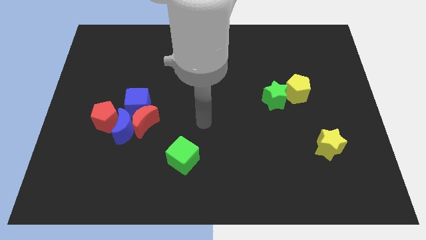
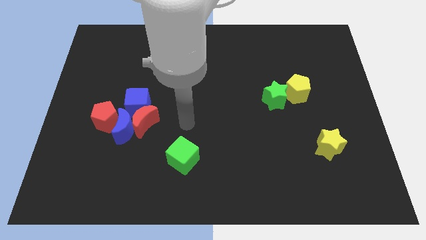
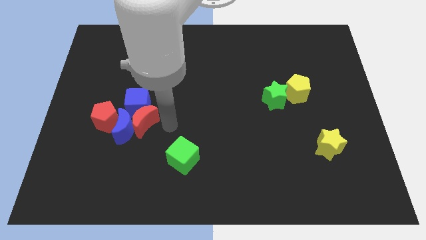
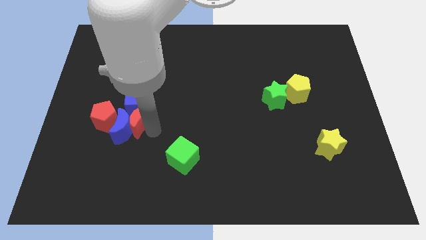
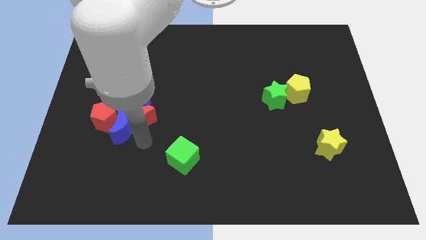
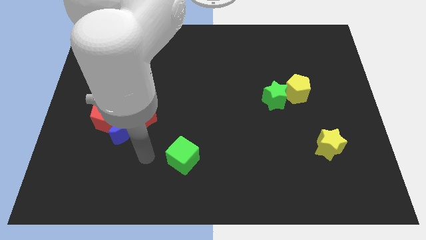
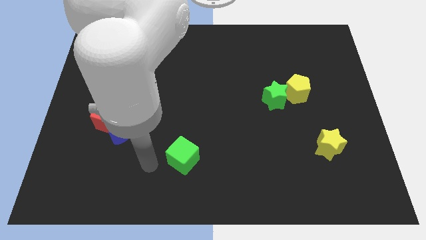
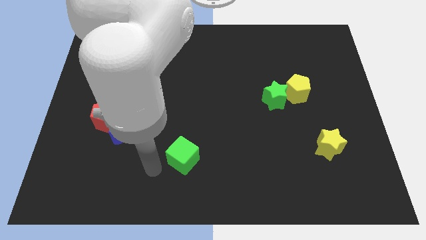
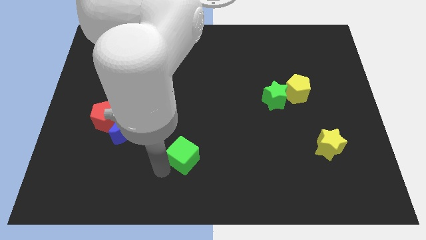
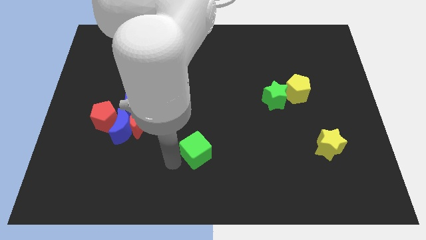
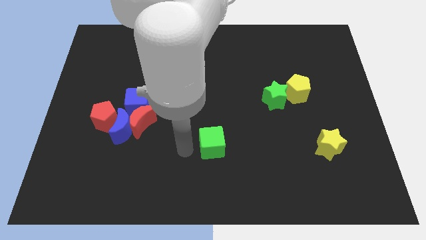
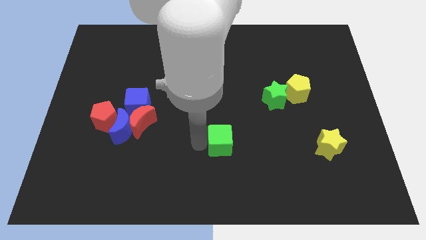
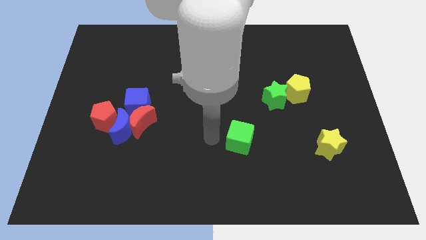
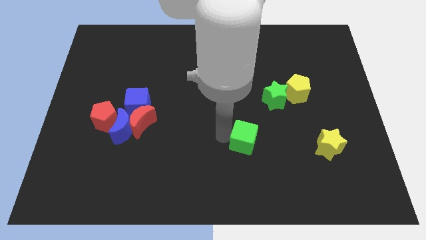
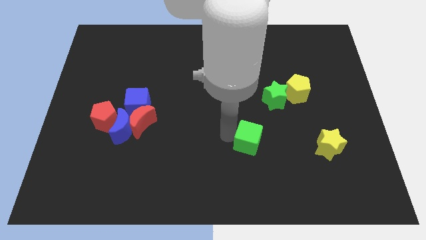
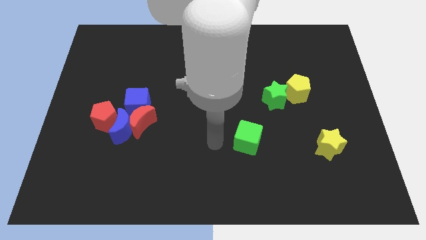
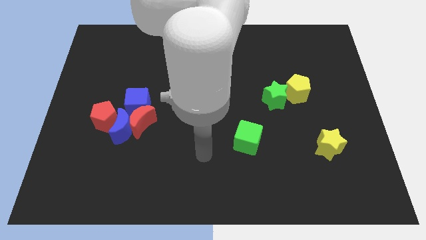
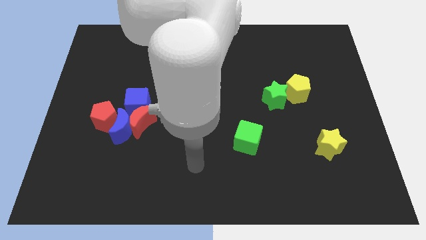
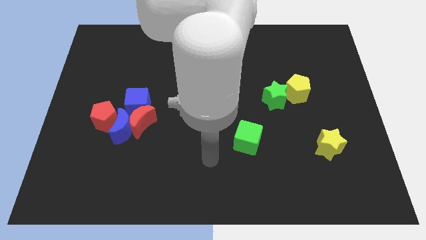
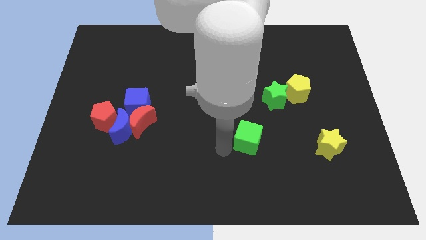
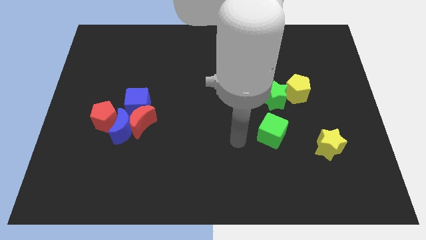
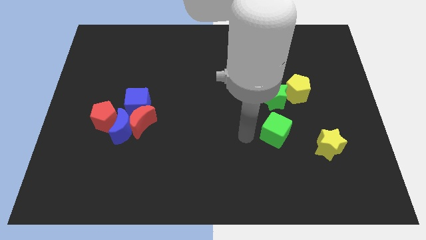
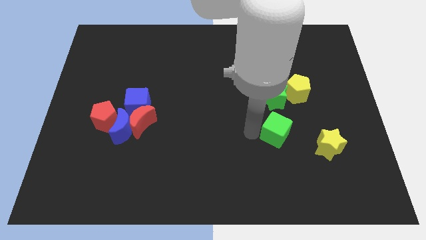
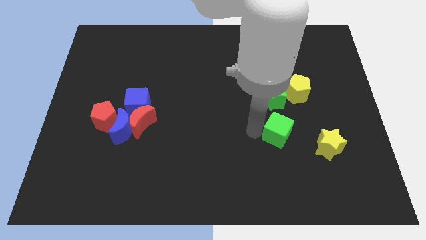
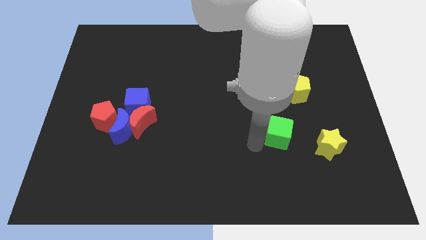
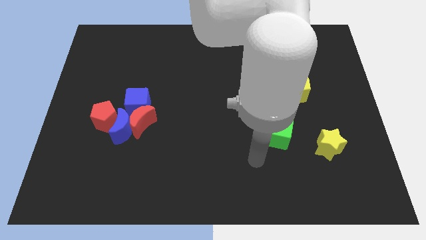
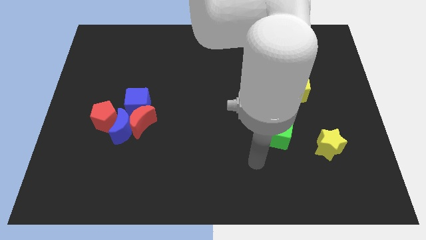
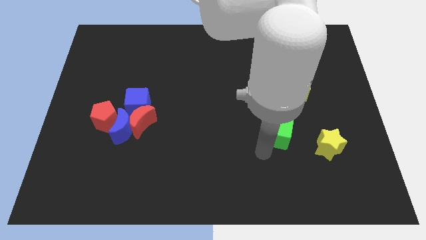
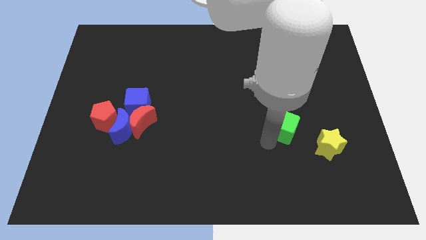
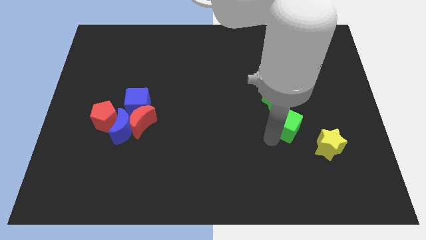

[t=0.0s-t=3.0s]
place the green cube below the green star

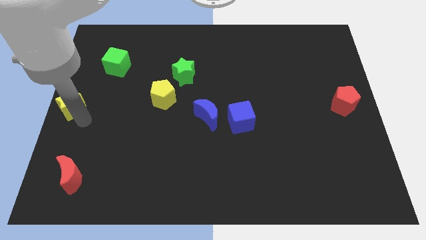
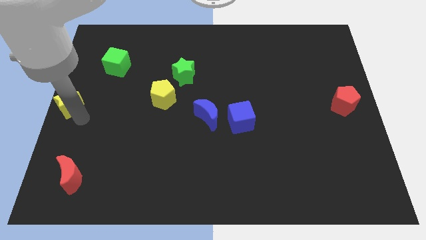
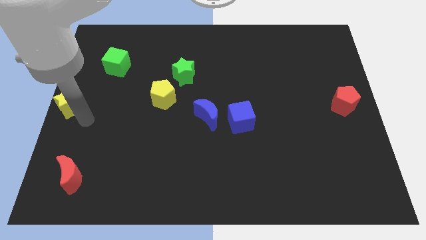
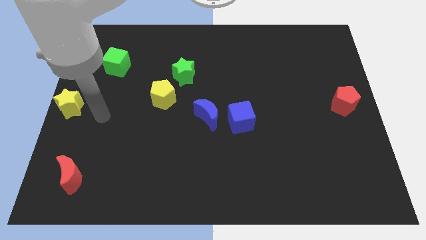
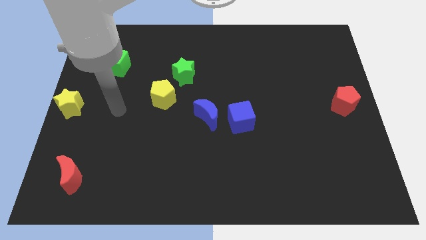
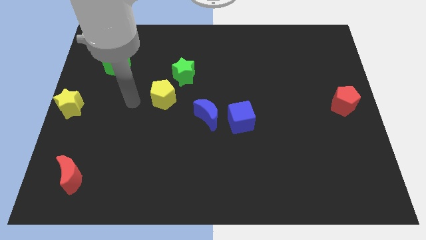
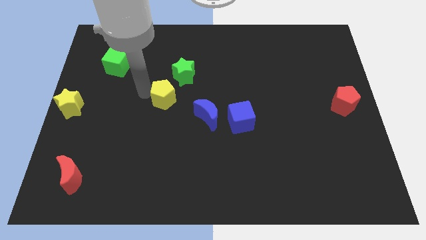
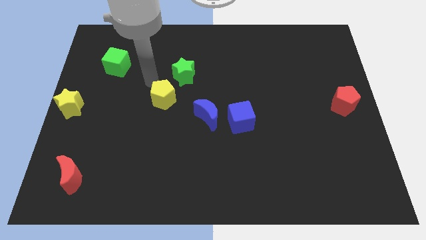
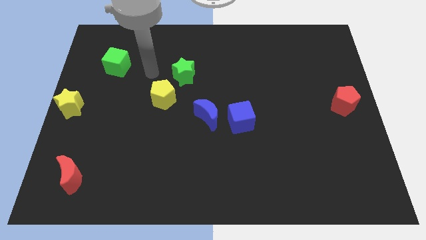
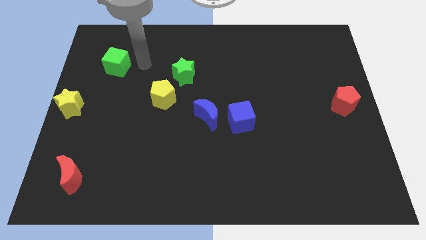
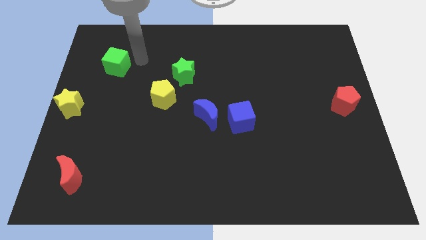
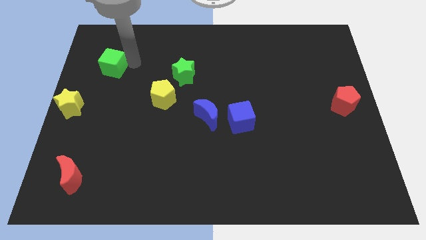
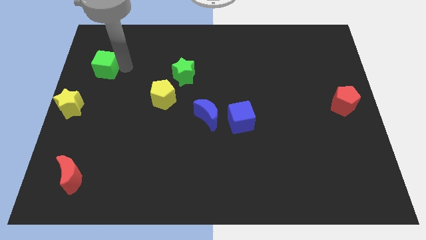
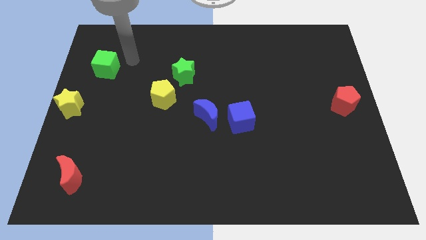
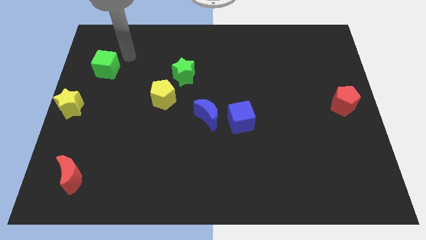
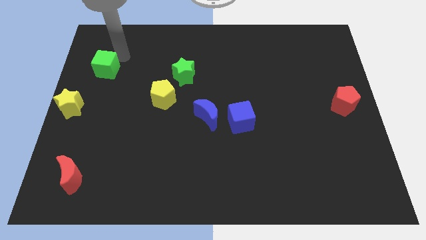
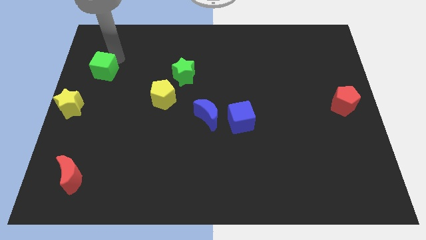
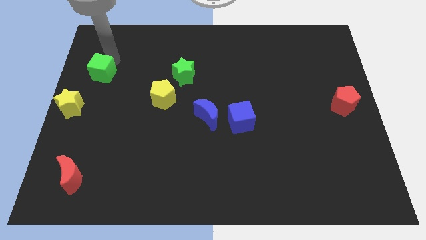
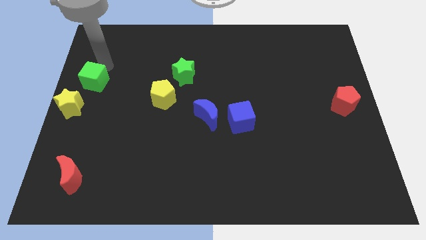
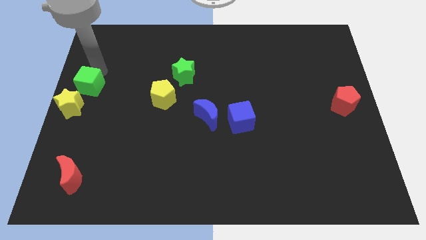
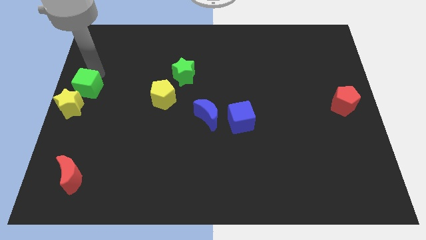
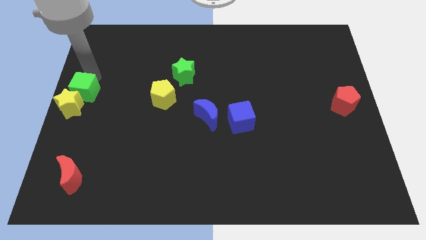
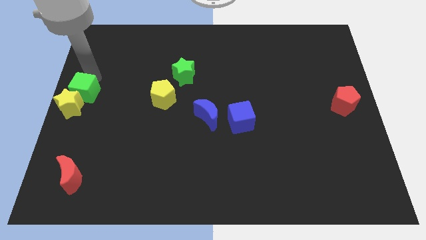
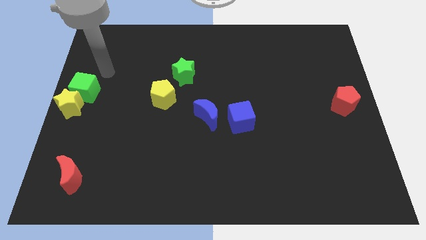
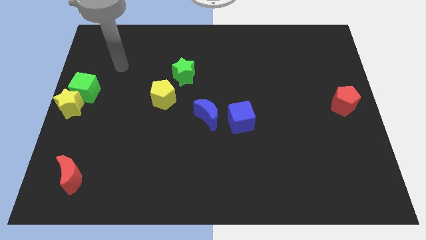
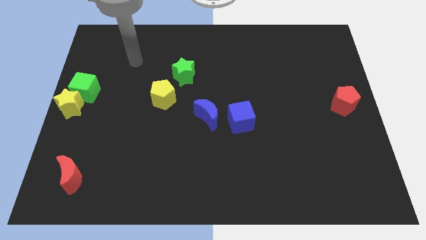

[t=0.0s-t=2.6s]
place the green cube at the top of yellow star

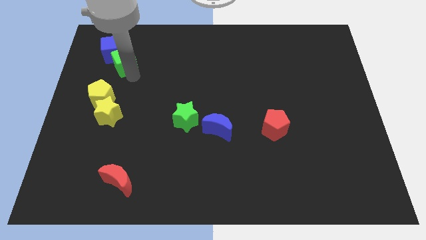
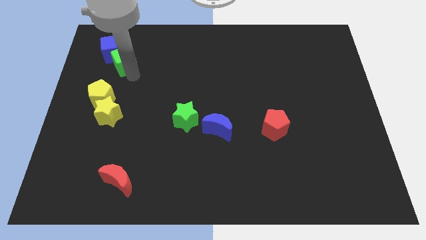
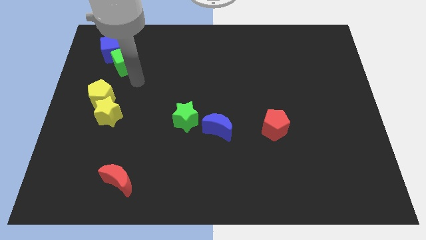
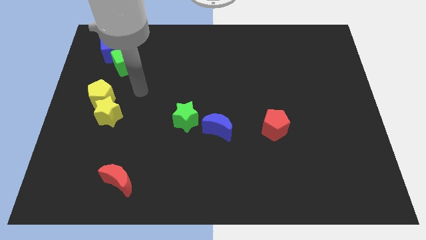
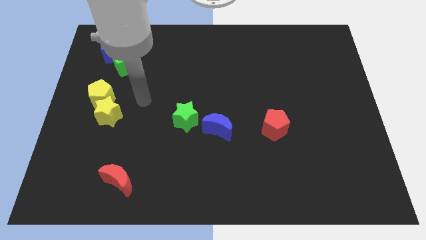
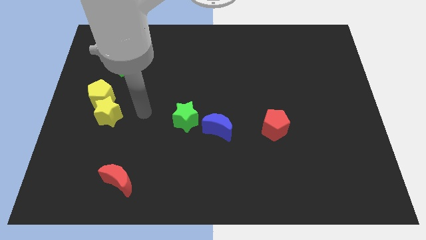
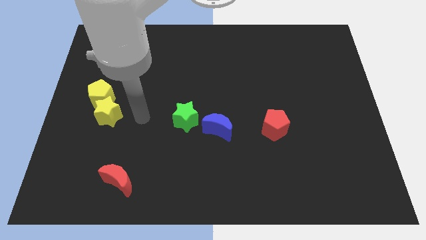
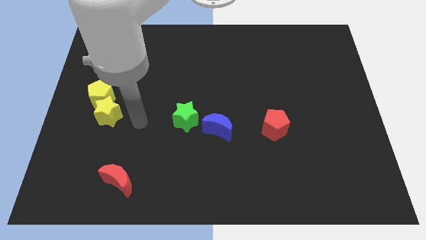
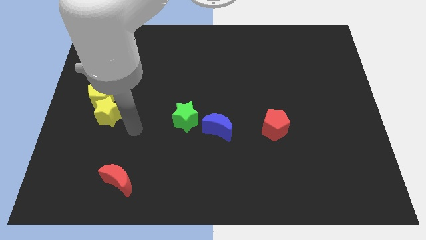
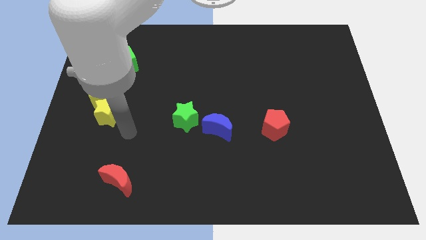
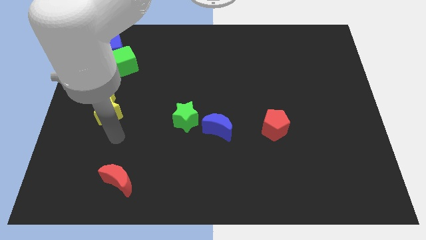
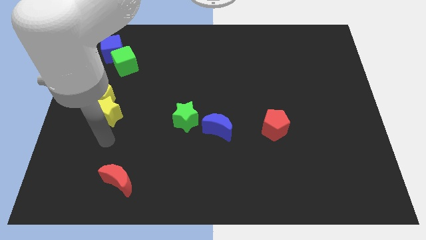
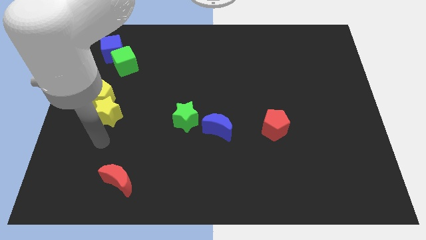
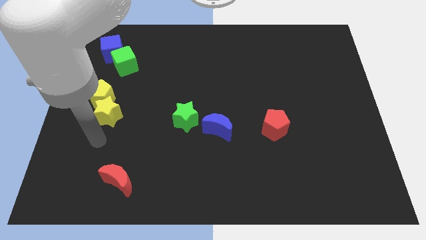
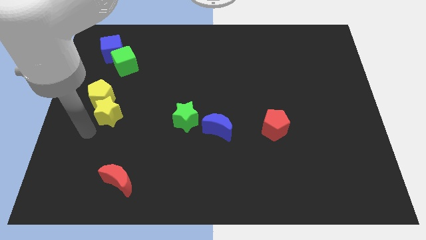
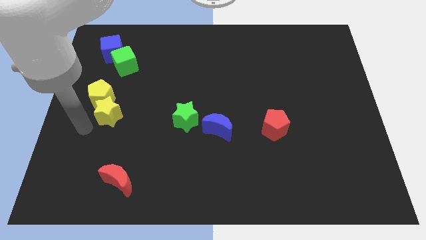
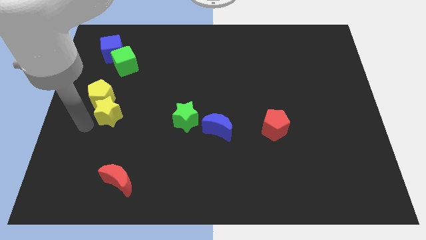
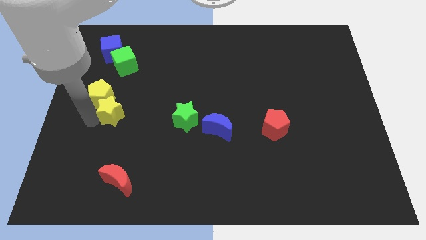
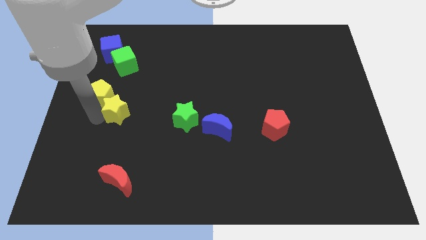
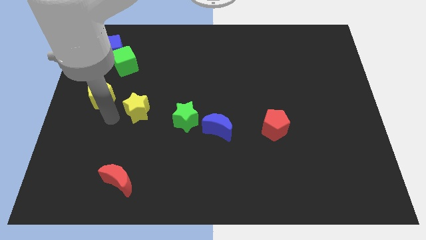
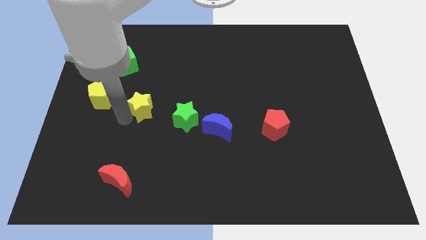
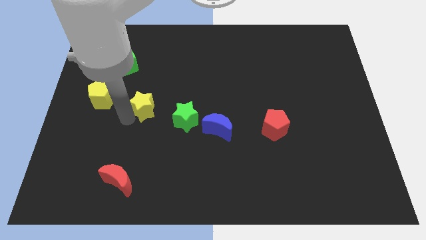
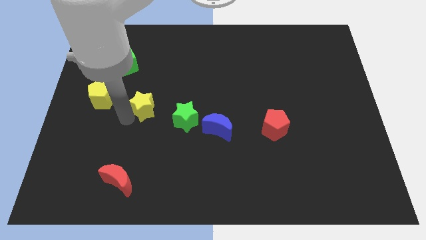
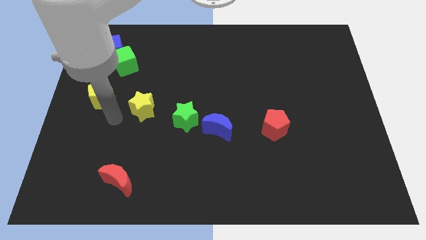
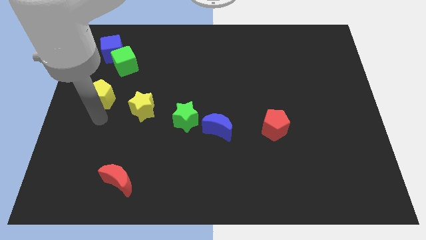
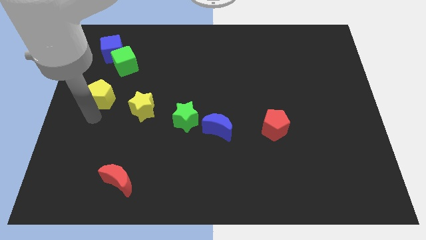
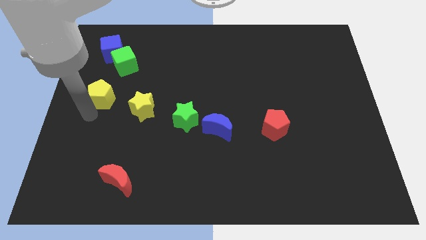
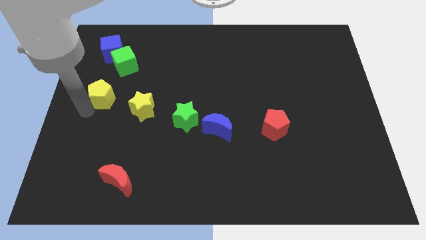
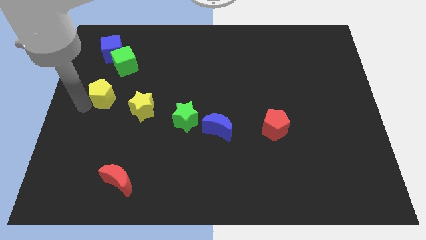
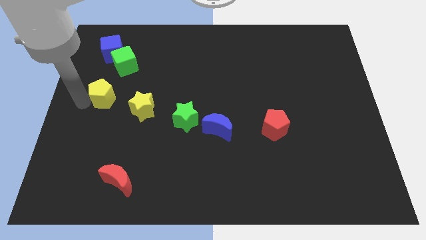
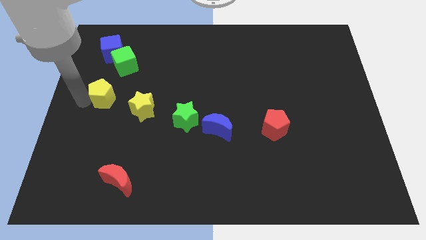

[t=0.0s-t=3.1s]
slightly push yellow star to the green star

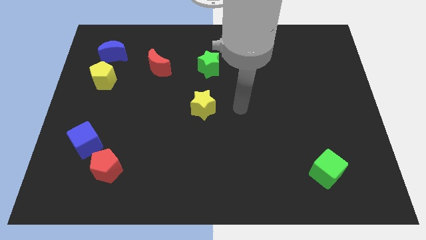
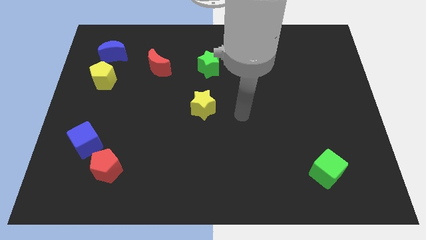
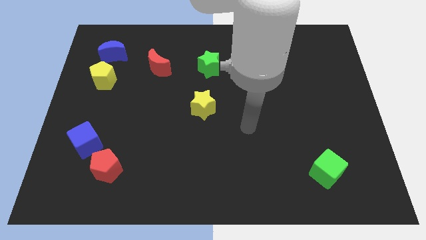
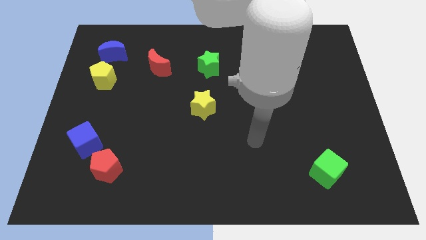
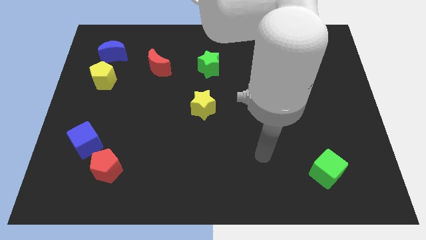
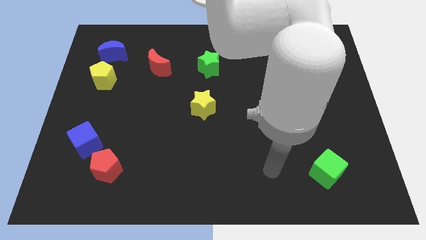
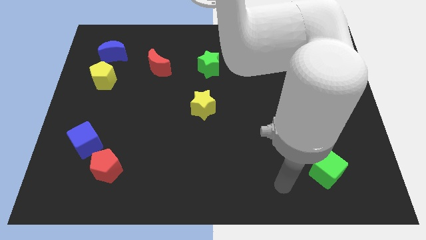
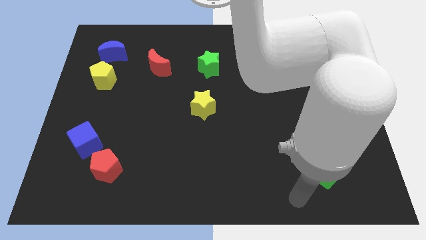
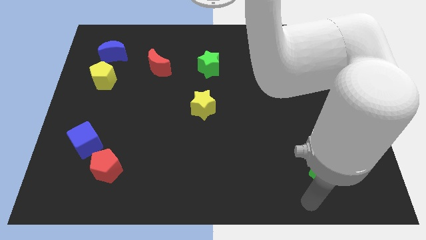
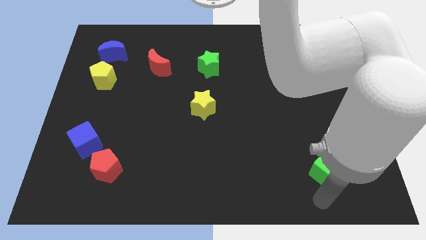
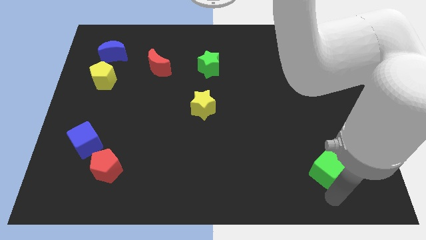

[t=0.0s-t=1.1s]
move your arm to the bottom side of the green cube
